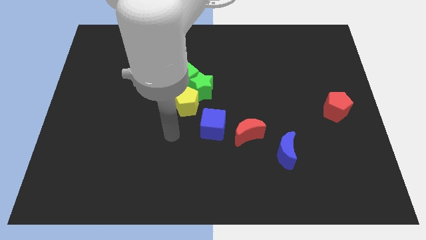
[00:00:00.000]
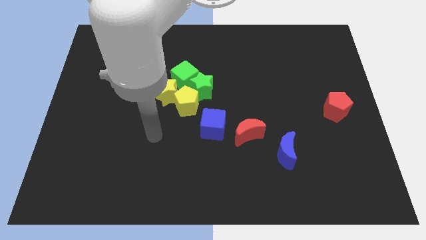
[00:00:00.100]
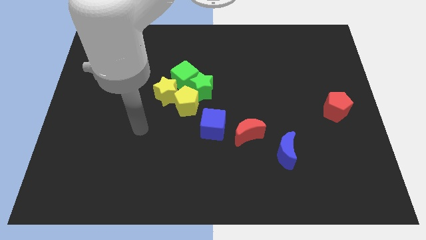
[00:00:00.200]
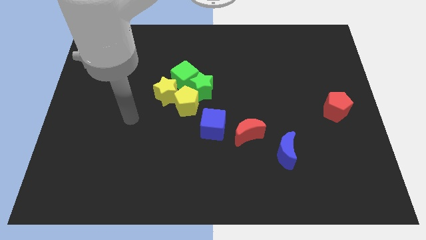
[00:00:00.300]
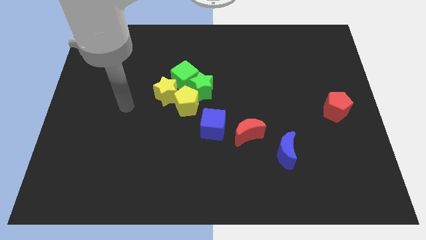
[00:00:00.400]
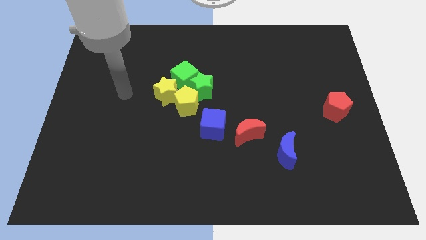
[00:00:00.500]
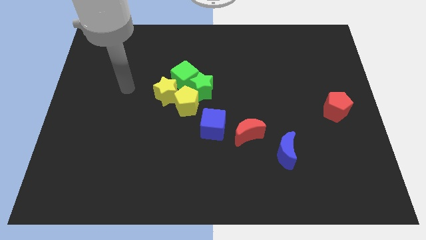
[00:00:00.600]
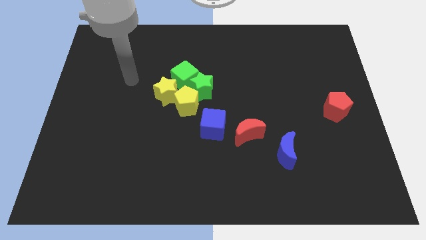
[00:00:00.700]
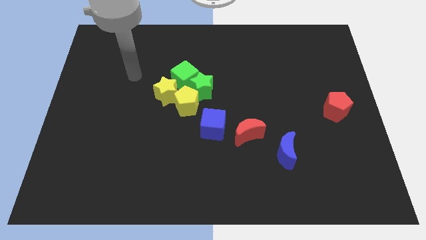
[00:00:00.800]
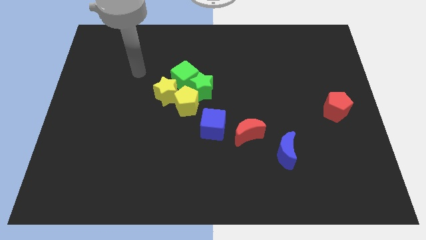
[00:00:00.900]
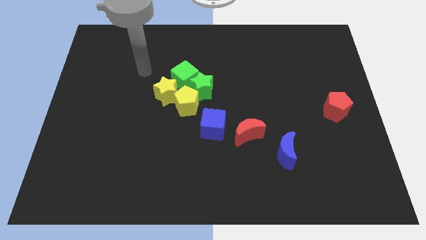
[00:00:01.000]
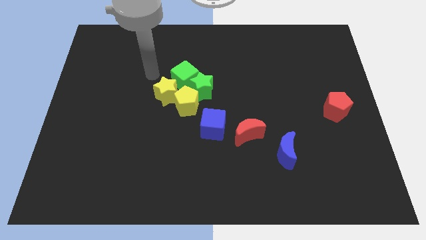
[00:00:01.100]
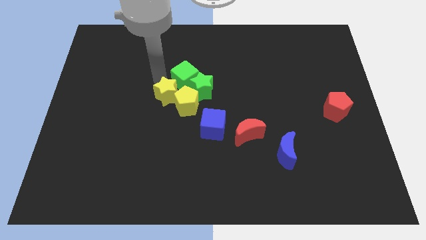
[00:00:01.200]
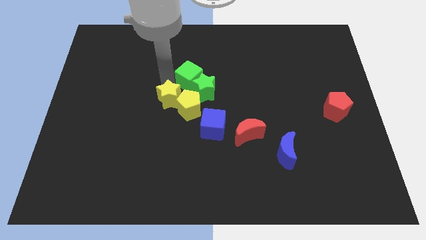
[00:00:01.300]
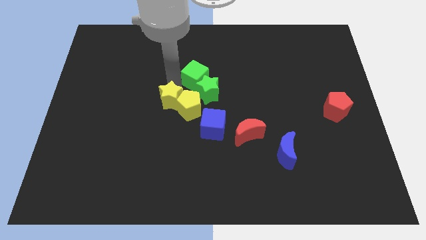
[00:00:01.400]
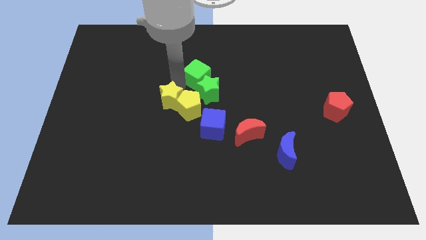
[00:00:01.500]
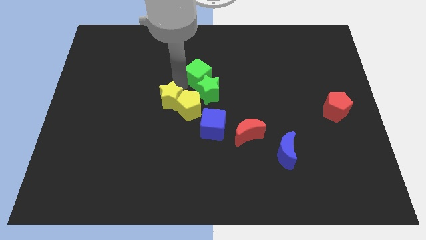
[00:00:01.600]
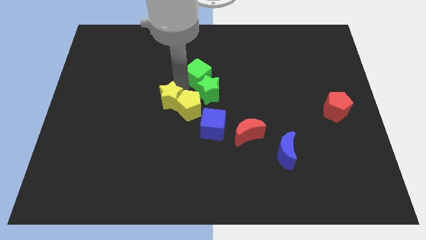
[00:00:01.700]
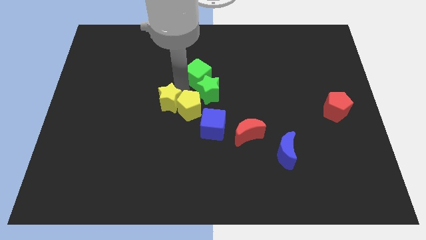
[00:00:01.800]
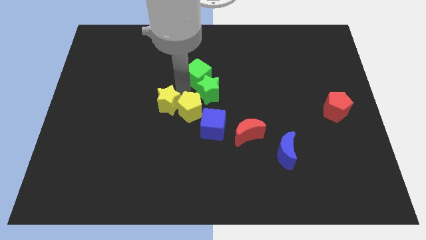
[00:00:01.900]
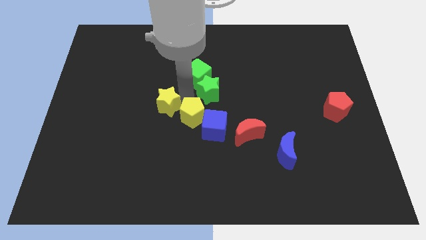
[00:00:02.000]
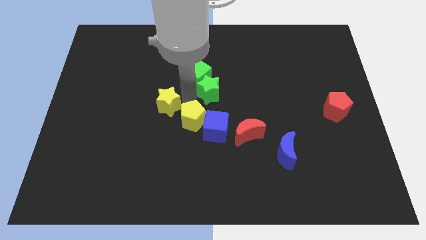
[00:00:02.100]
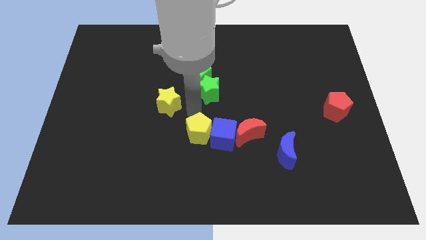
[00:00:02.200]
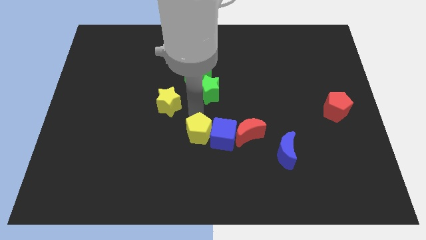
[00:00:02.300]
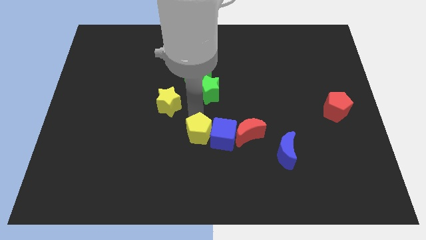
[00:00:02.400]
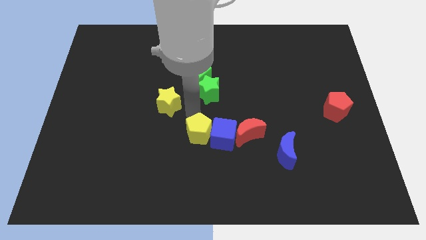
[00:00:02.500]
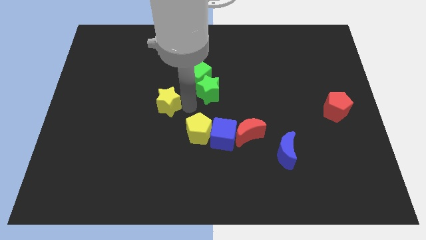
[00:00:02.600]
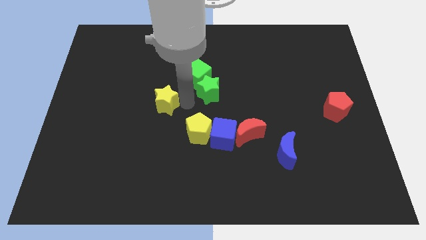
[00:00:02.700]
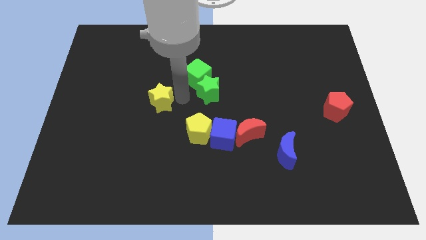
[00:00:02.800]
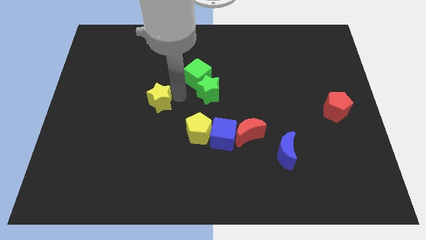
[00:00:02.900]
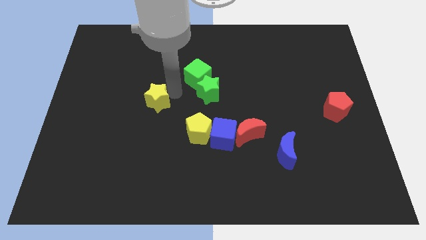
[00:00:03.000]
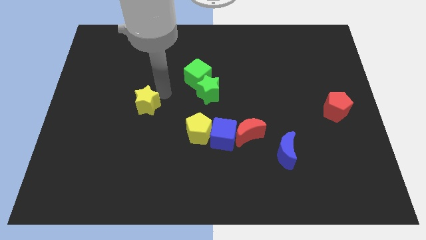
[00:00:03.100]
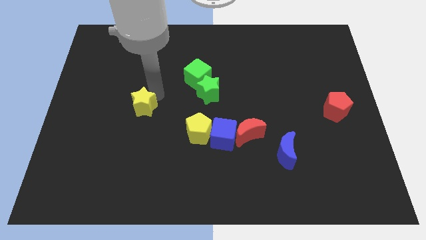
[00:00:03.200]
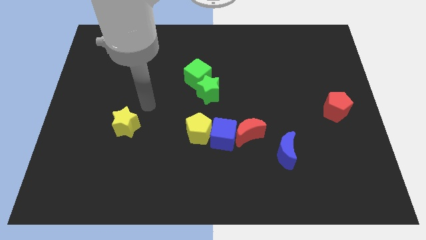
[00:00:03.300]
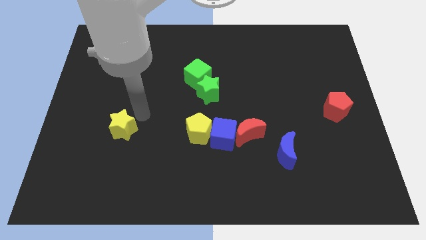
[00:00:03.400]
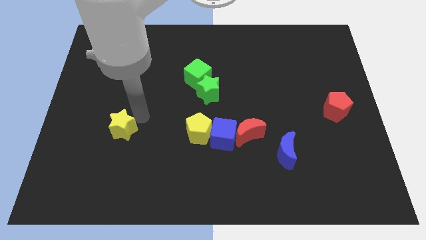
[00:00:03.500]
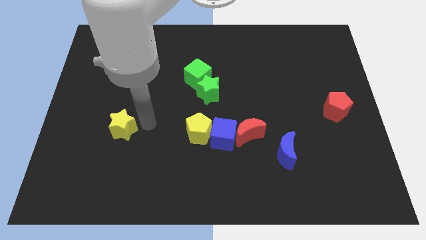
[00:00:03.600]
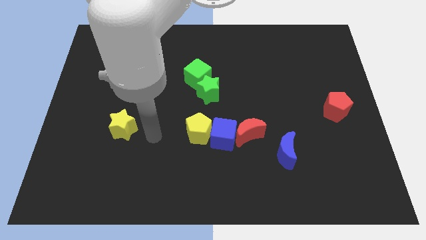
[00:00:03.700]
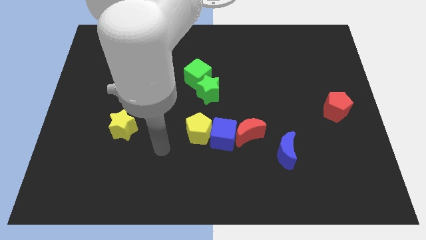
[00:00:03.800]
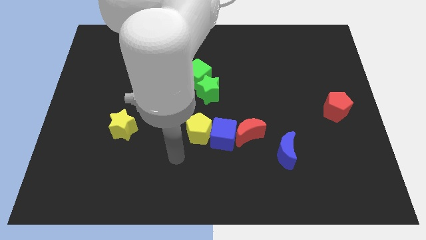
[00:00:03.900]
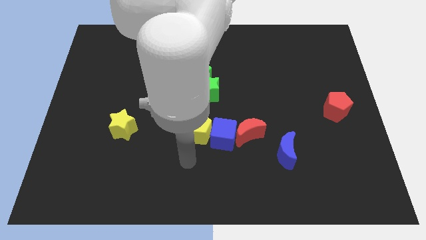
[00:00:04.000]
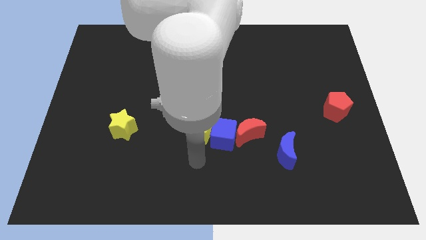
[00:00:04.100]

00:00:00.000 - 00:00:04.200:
slide the yellow blocks away from the green blocks

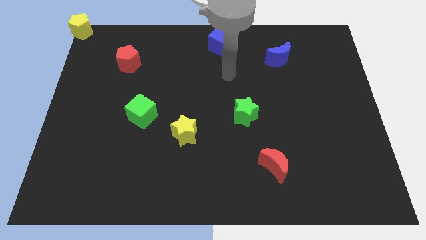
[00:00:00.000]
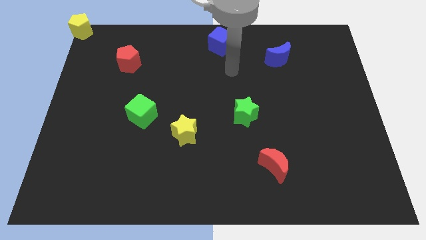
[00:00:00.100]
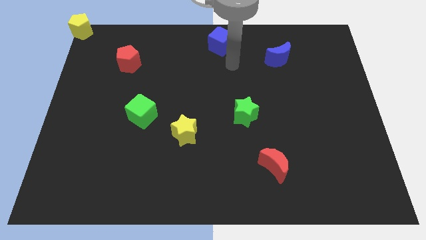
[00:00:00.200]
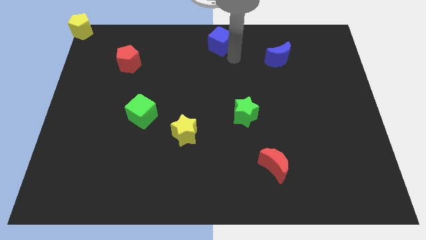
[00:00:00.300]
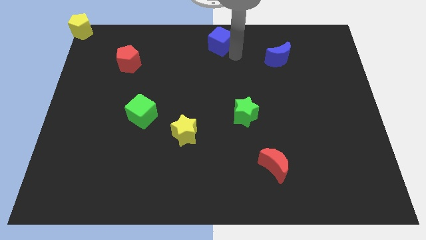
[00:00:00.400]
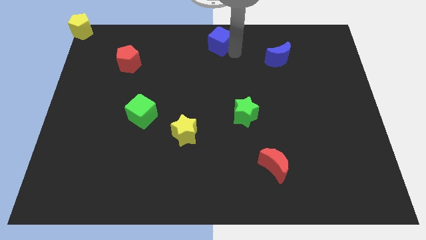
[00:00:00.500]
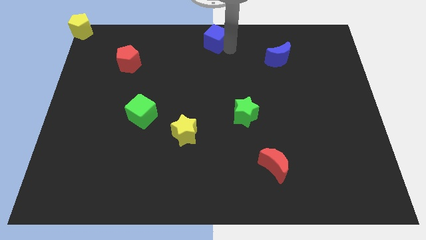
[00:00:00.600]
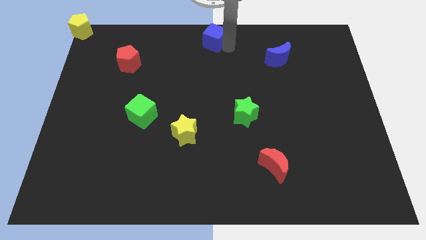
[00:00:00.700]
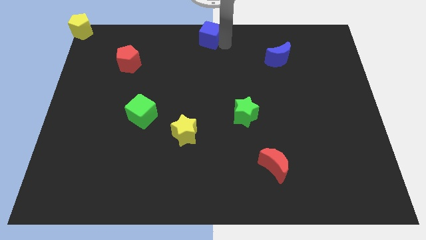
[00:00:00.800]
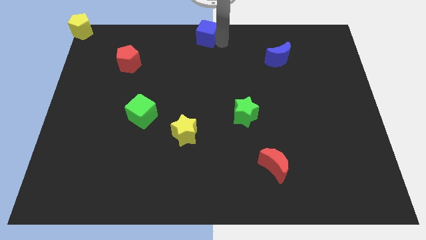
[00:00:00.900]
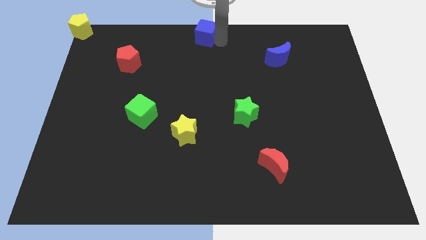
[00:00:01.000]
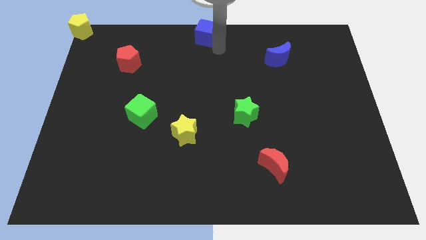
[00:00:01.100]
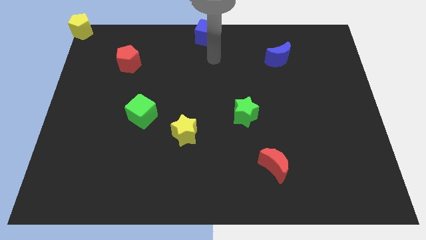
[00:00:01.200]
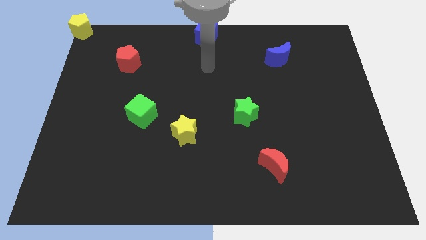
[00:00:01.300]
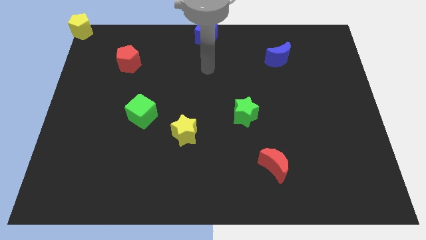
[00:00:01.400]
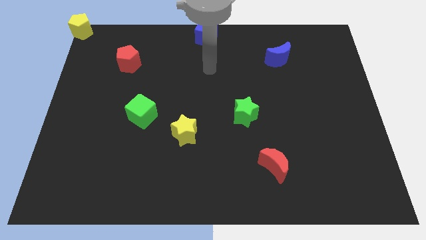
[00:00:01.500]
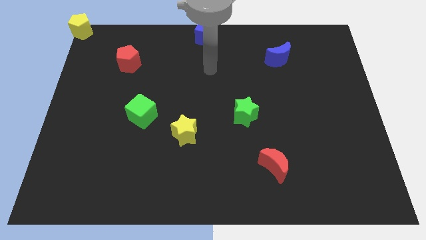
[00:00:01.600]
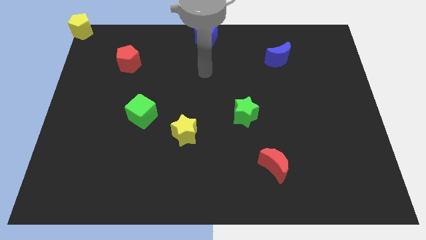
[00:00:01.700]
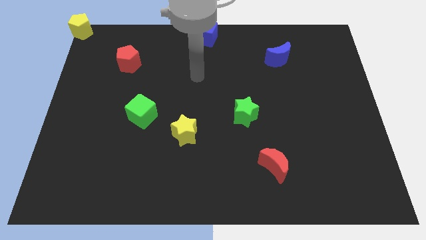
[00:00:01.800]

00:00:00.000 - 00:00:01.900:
place blue cube at top center of the board

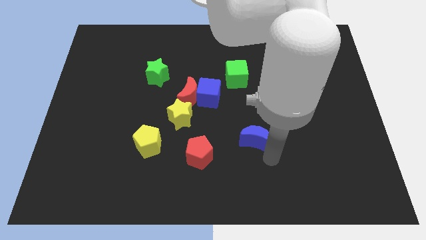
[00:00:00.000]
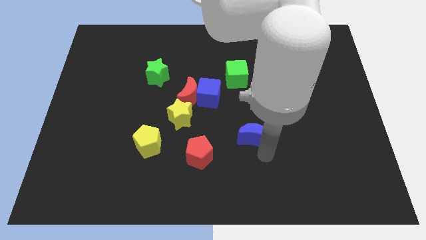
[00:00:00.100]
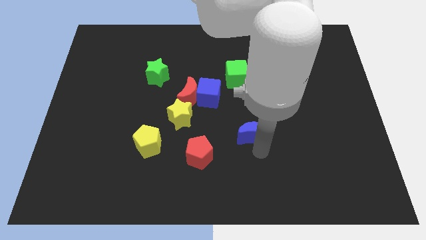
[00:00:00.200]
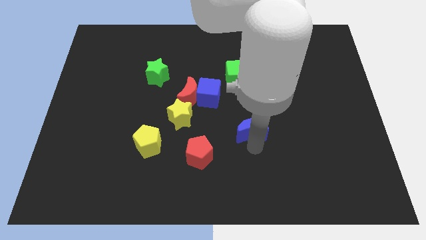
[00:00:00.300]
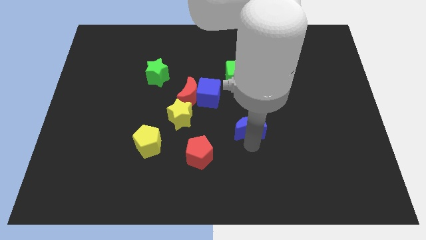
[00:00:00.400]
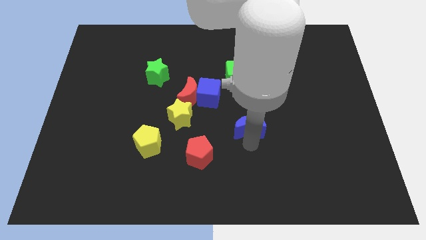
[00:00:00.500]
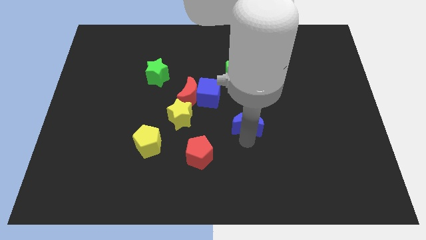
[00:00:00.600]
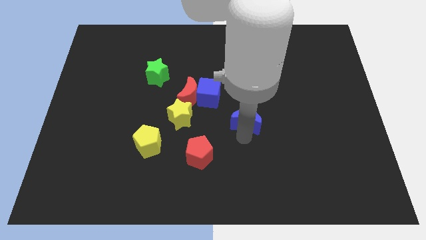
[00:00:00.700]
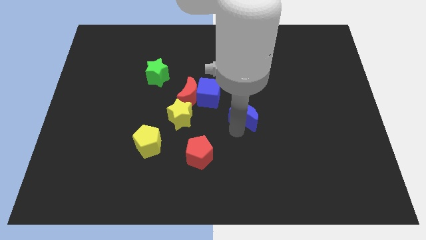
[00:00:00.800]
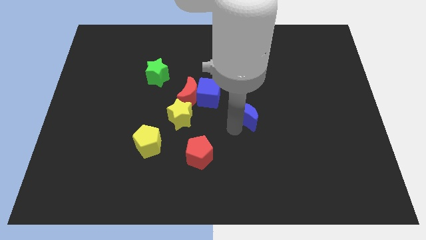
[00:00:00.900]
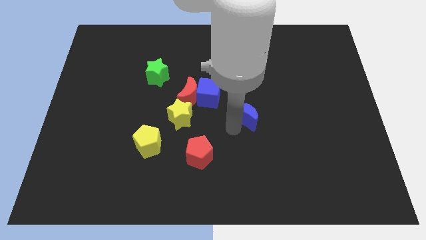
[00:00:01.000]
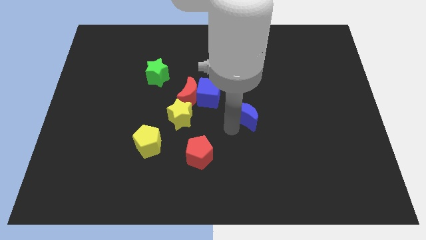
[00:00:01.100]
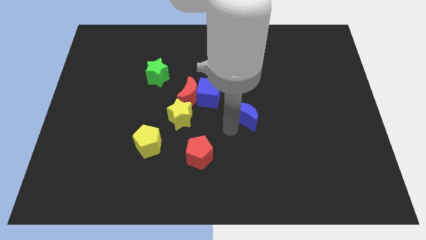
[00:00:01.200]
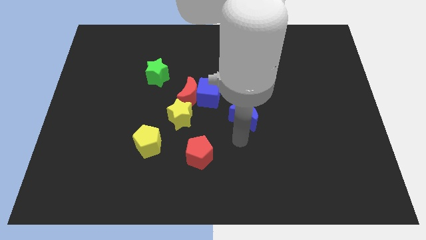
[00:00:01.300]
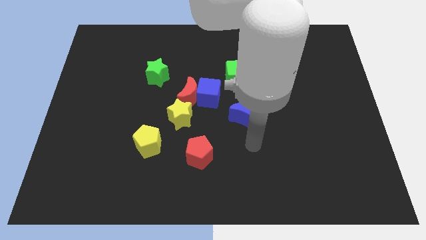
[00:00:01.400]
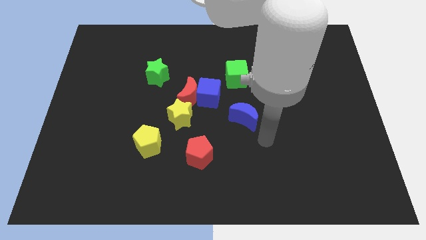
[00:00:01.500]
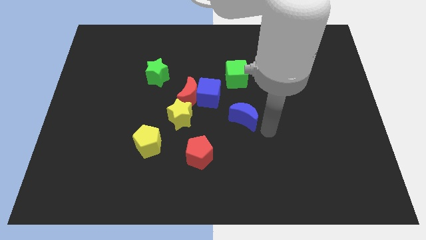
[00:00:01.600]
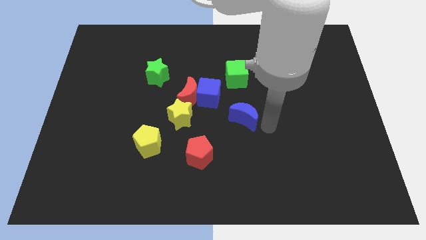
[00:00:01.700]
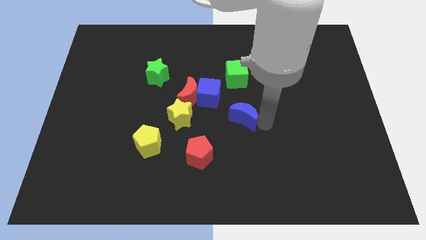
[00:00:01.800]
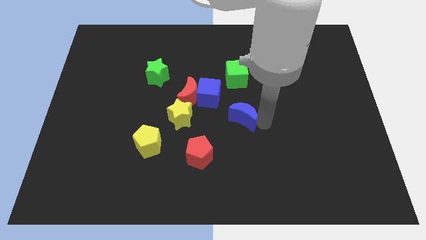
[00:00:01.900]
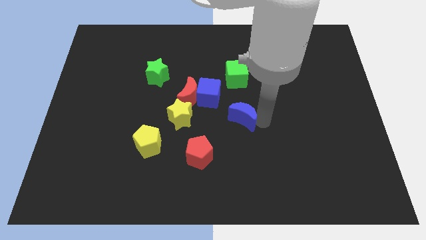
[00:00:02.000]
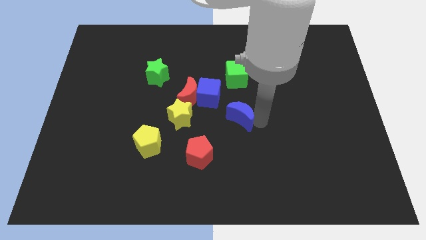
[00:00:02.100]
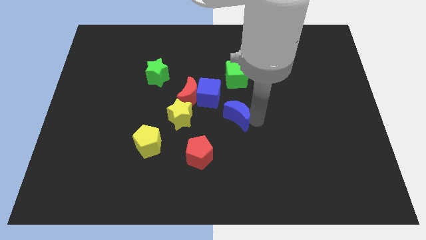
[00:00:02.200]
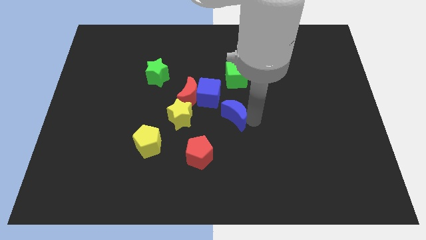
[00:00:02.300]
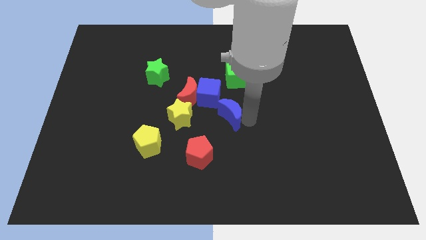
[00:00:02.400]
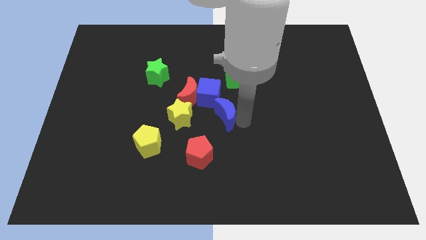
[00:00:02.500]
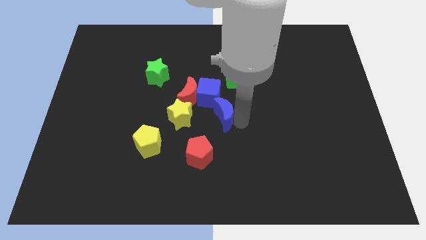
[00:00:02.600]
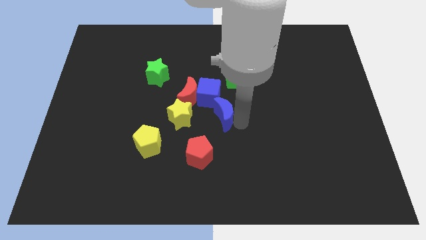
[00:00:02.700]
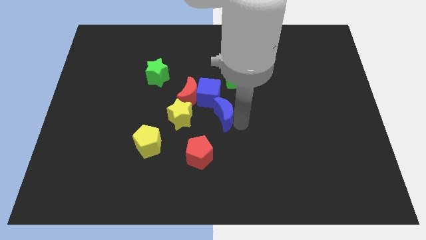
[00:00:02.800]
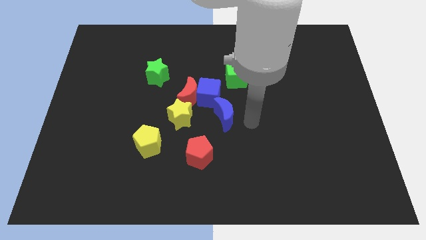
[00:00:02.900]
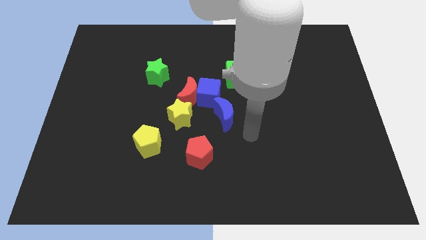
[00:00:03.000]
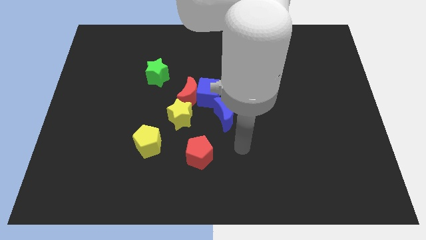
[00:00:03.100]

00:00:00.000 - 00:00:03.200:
move the blue moon towards the blue cube
